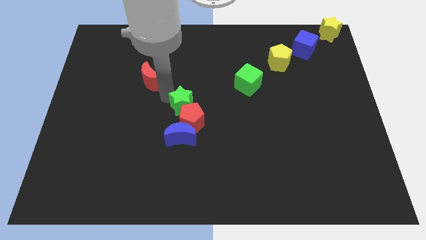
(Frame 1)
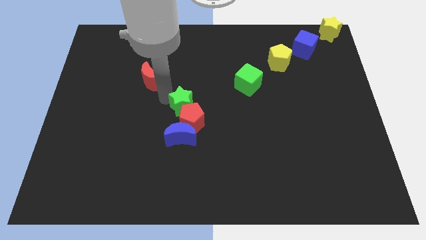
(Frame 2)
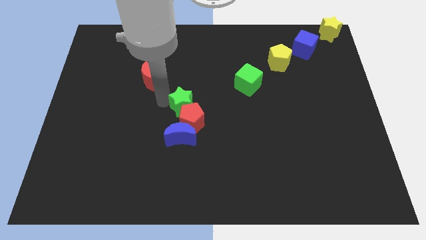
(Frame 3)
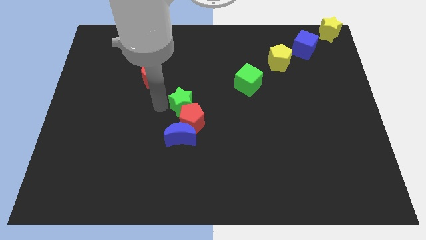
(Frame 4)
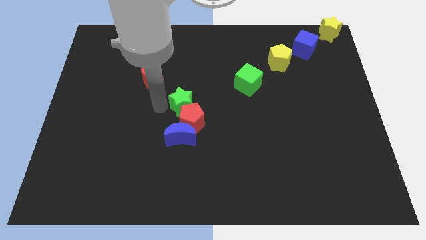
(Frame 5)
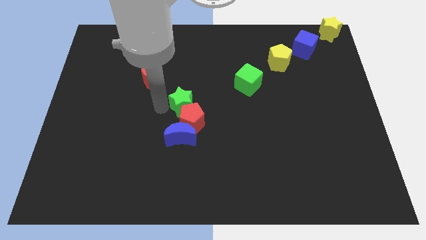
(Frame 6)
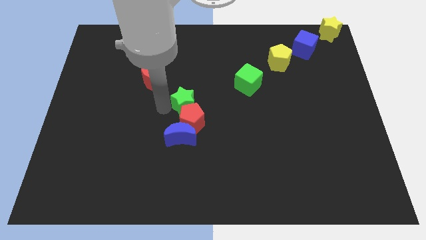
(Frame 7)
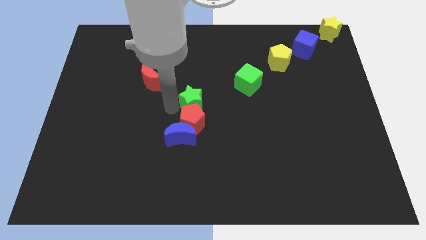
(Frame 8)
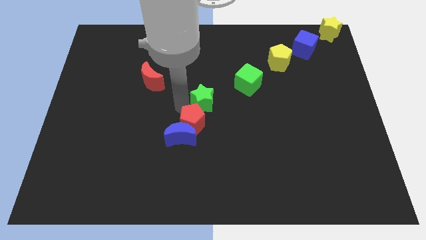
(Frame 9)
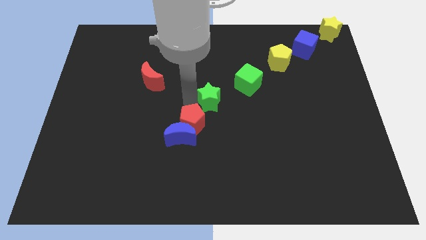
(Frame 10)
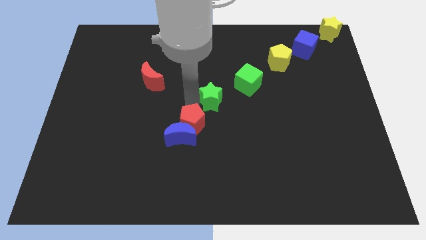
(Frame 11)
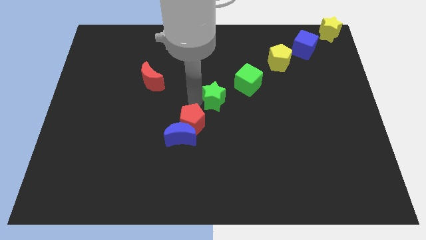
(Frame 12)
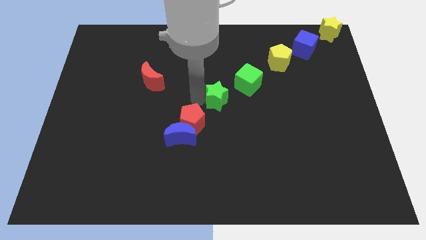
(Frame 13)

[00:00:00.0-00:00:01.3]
place the green star below green cube

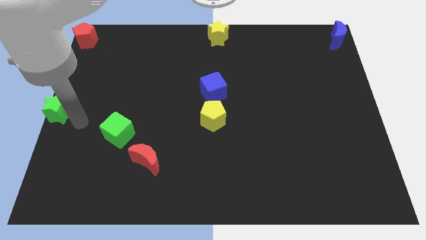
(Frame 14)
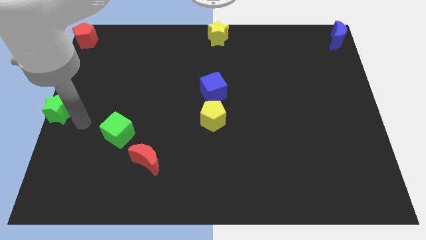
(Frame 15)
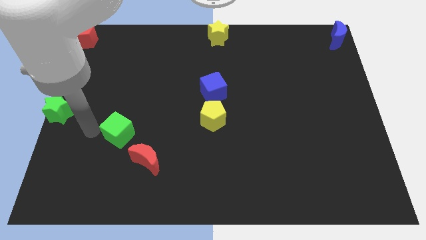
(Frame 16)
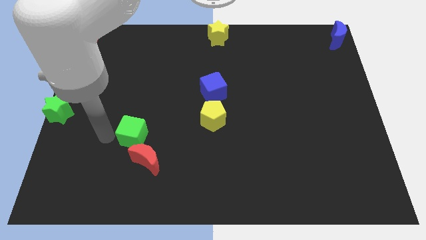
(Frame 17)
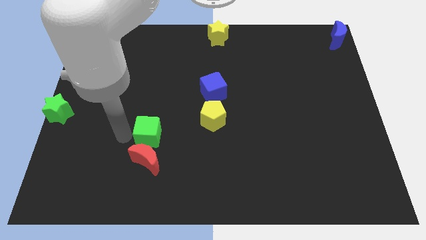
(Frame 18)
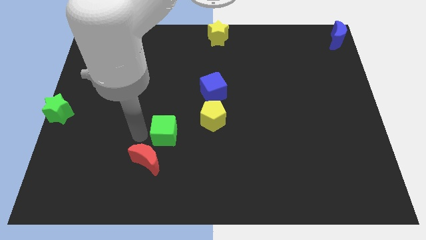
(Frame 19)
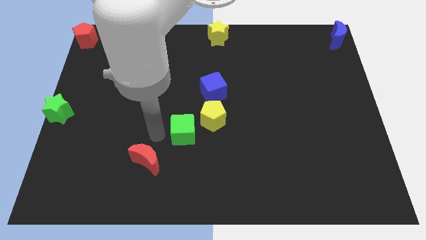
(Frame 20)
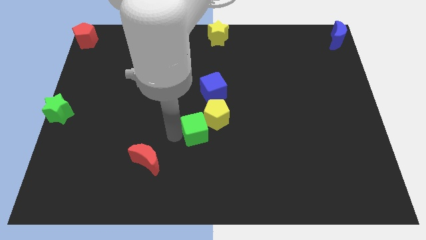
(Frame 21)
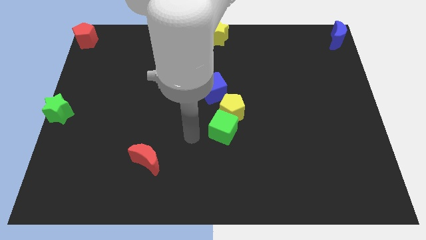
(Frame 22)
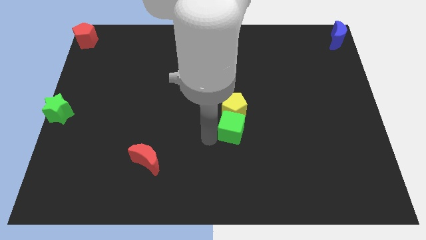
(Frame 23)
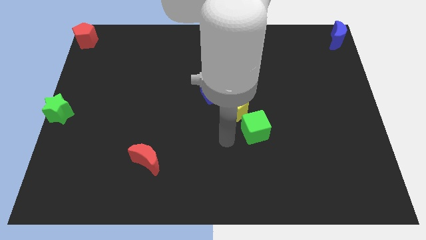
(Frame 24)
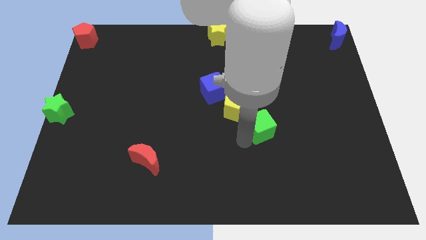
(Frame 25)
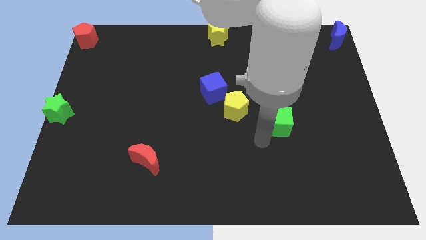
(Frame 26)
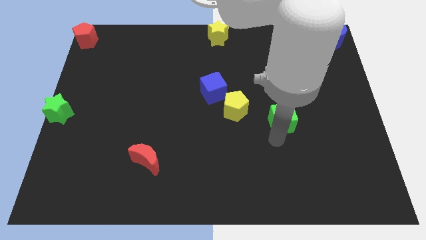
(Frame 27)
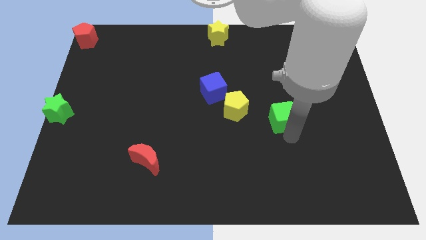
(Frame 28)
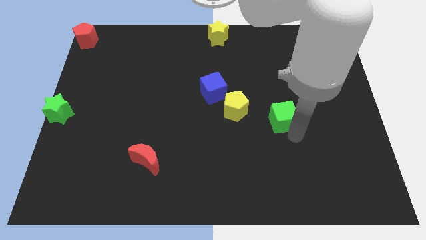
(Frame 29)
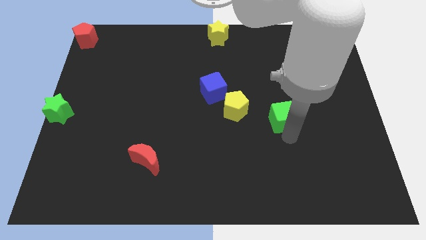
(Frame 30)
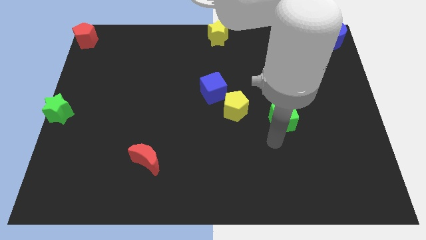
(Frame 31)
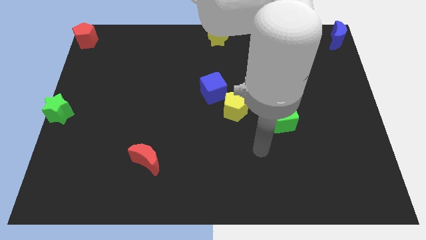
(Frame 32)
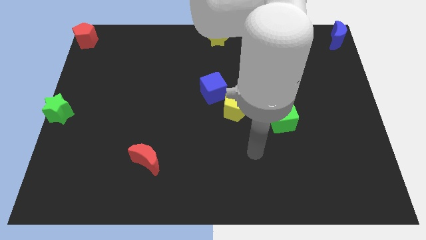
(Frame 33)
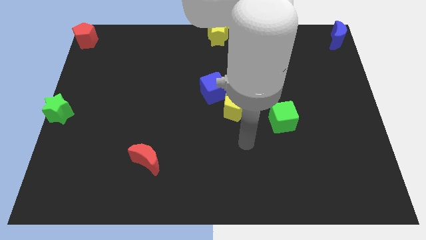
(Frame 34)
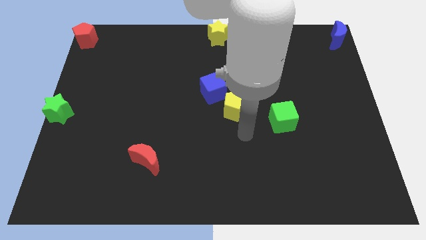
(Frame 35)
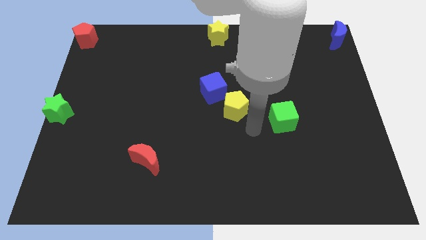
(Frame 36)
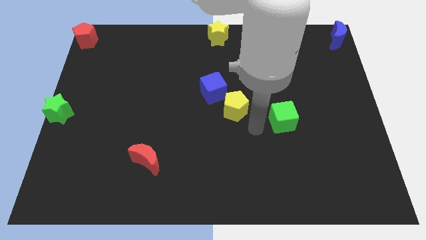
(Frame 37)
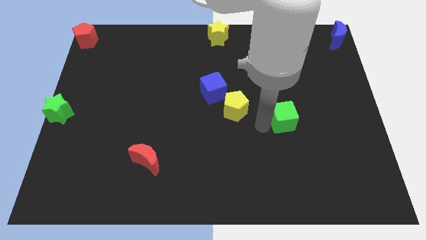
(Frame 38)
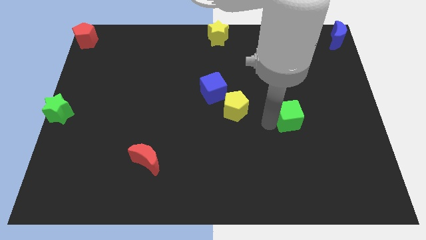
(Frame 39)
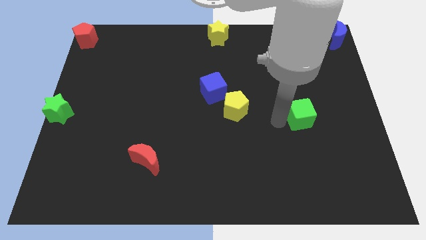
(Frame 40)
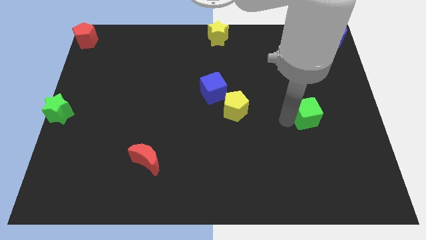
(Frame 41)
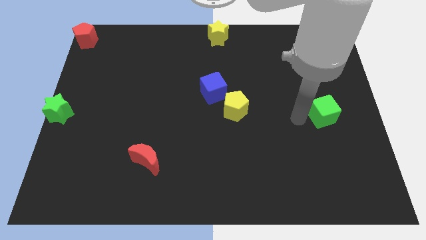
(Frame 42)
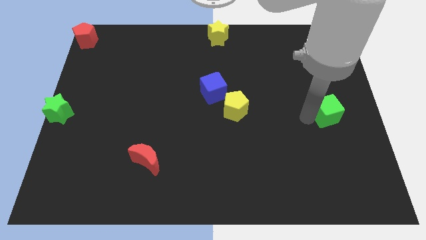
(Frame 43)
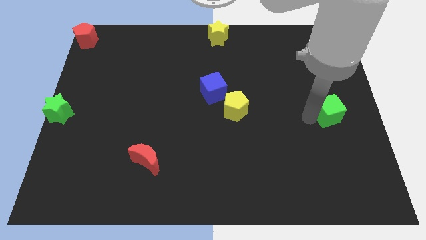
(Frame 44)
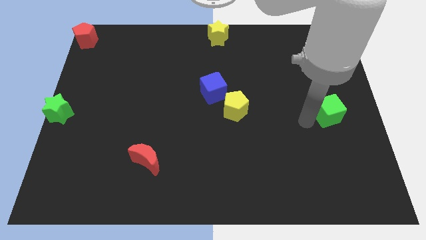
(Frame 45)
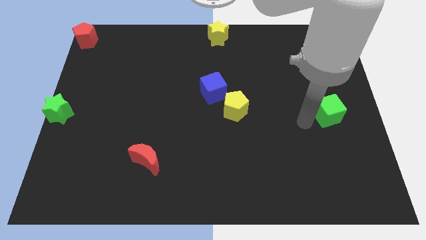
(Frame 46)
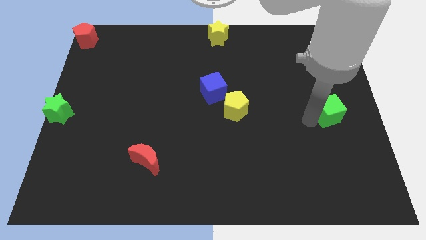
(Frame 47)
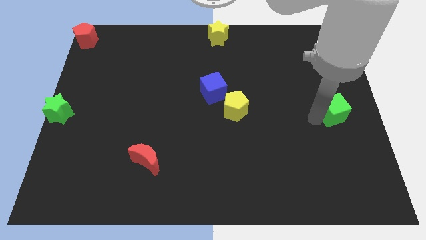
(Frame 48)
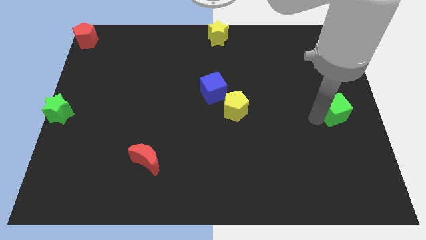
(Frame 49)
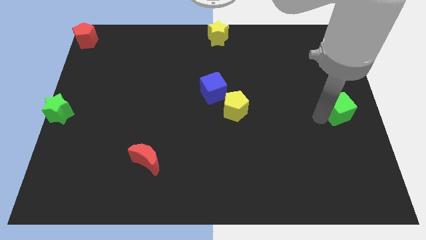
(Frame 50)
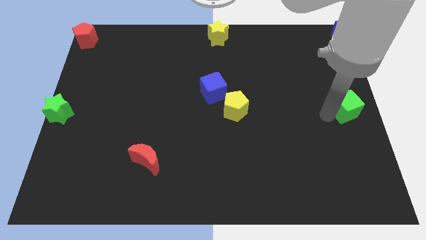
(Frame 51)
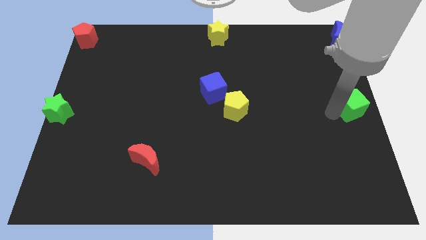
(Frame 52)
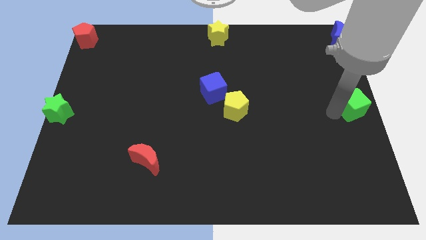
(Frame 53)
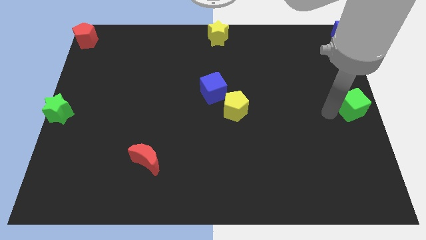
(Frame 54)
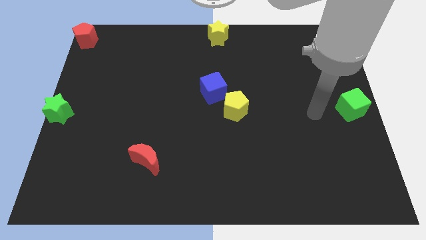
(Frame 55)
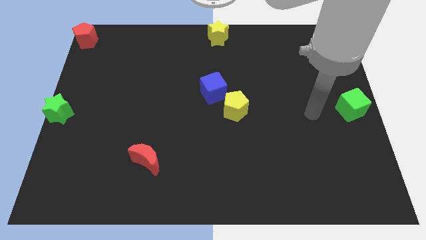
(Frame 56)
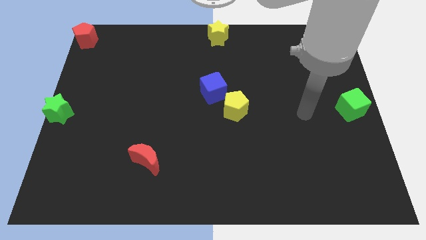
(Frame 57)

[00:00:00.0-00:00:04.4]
push the green cube to the right center of the board

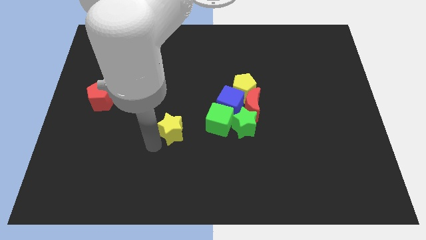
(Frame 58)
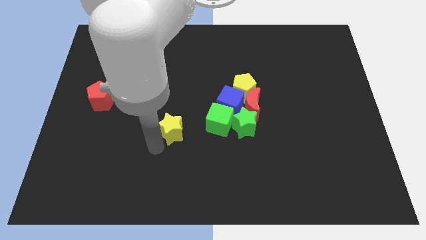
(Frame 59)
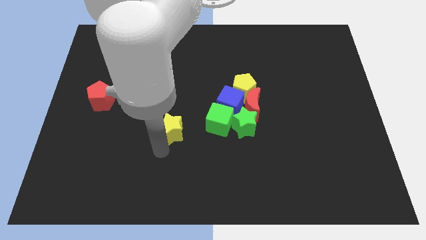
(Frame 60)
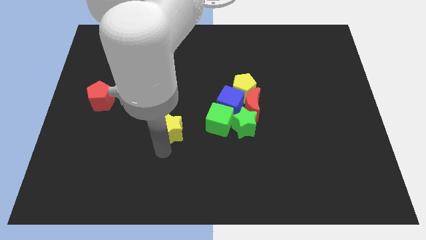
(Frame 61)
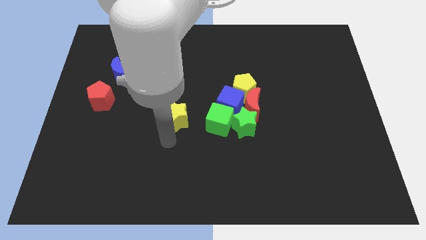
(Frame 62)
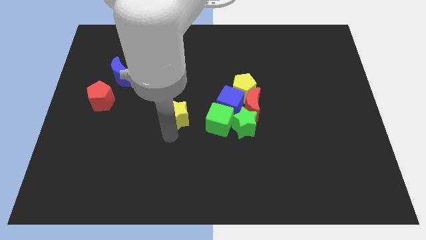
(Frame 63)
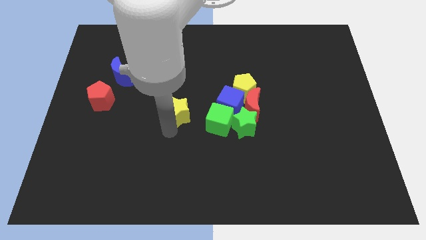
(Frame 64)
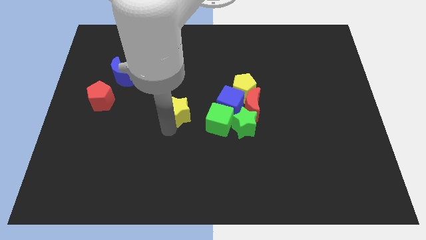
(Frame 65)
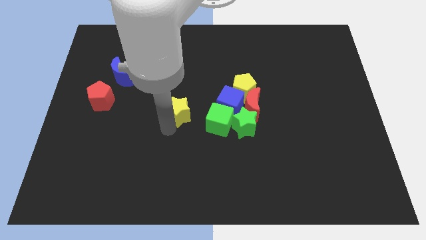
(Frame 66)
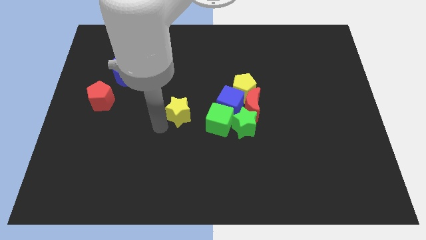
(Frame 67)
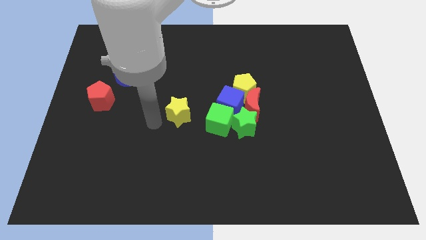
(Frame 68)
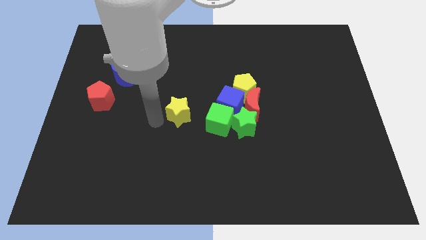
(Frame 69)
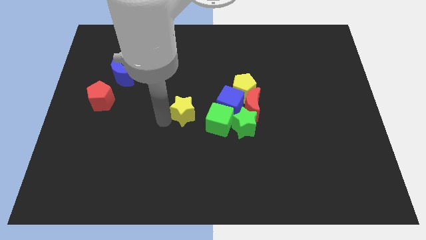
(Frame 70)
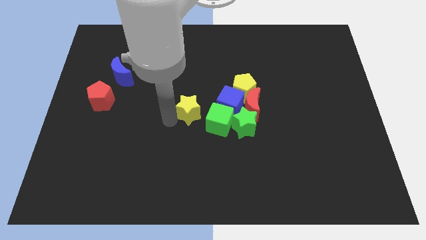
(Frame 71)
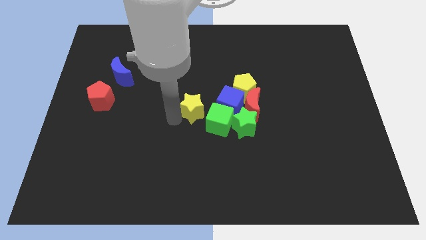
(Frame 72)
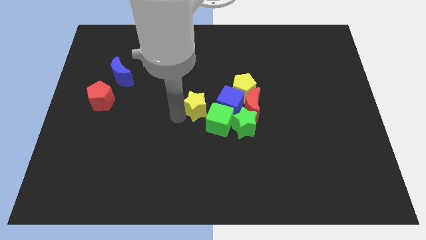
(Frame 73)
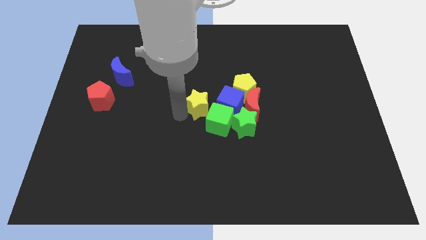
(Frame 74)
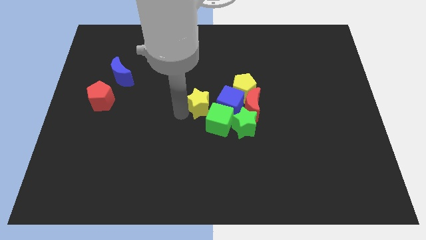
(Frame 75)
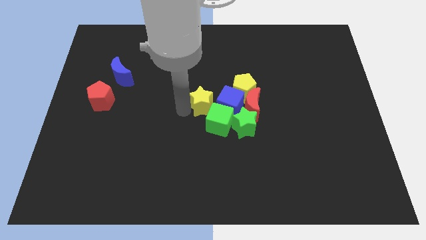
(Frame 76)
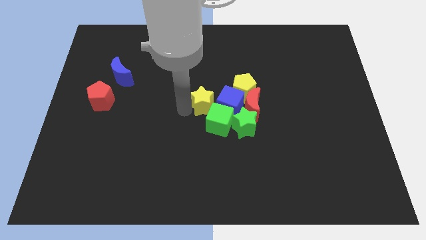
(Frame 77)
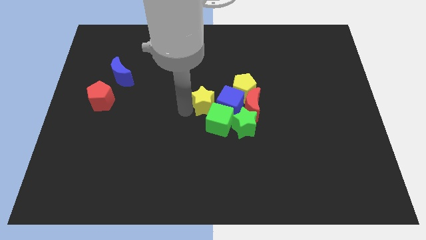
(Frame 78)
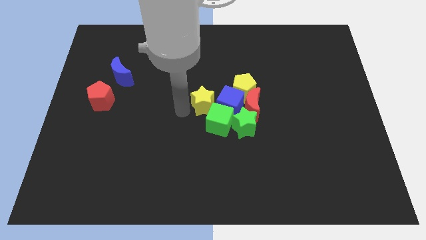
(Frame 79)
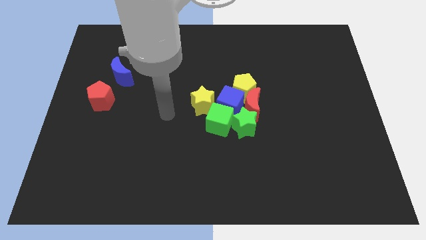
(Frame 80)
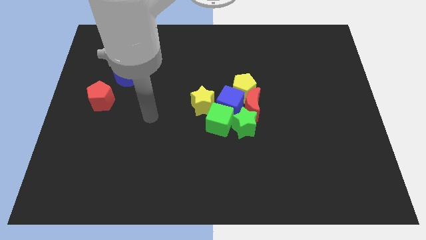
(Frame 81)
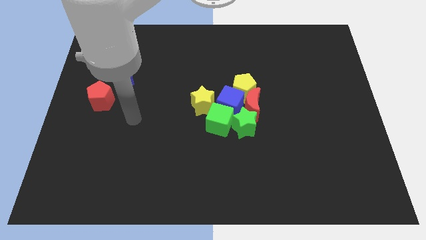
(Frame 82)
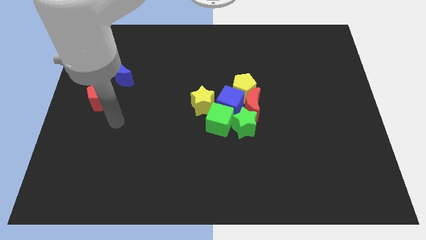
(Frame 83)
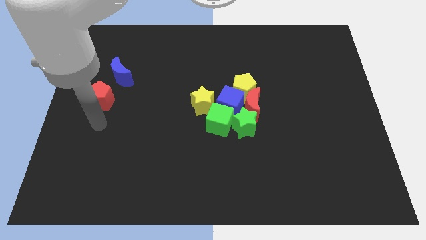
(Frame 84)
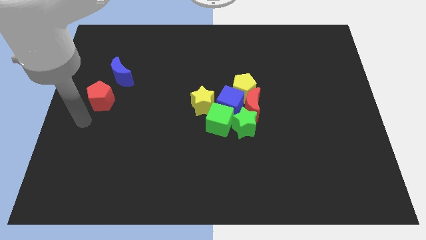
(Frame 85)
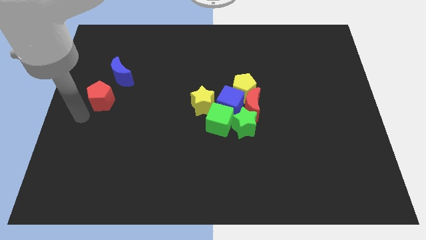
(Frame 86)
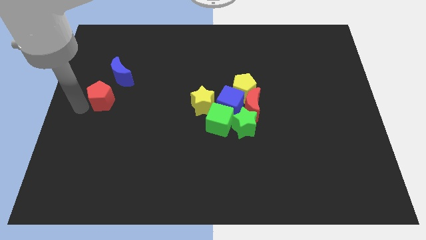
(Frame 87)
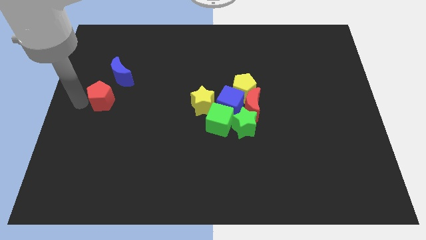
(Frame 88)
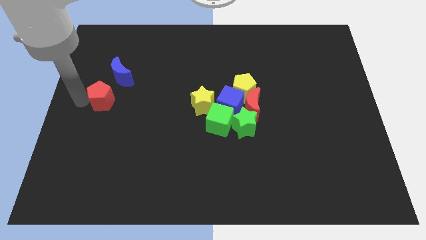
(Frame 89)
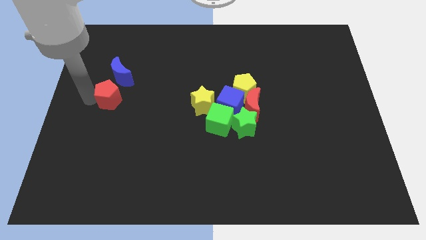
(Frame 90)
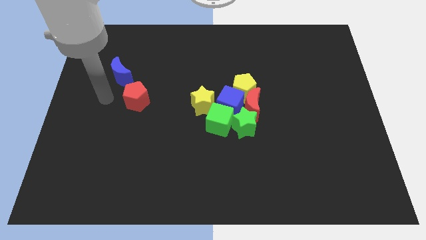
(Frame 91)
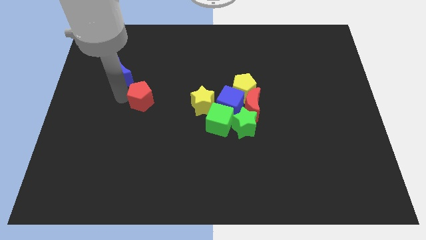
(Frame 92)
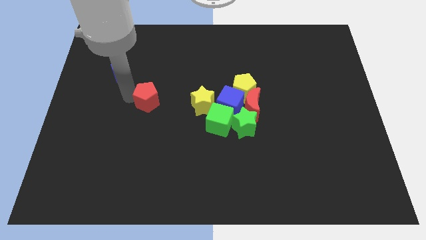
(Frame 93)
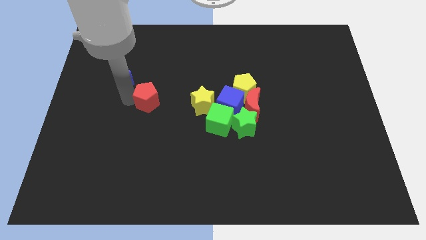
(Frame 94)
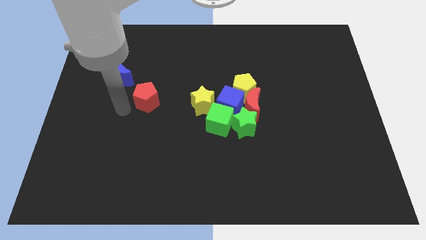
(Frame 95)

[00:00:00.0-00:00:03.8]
move the red pentagon to the center
